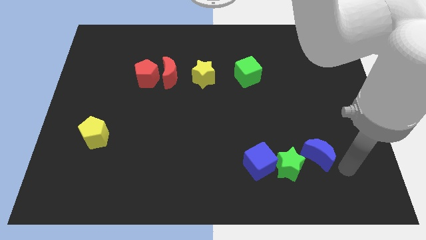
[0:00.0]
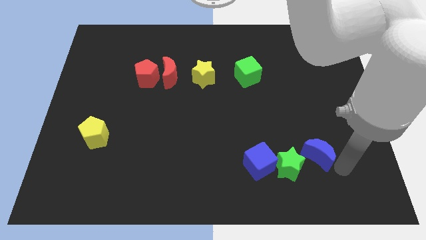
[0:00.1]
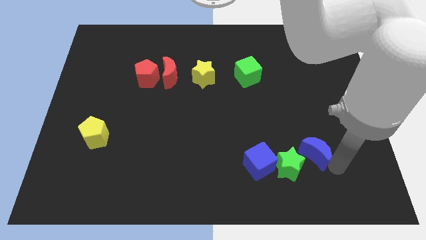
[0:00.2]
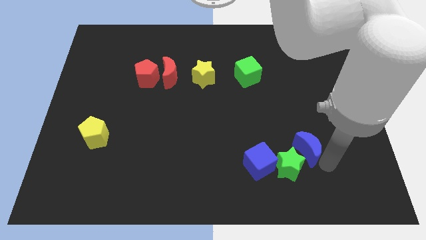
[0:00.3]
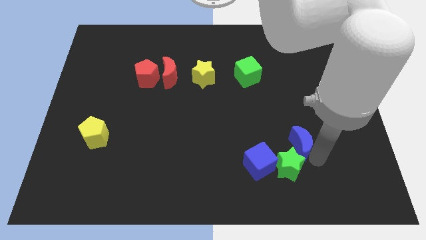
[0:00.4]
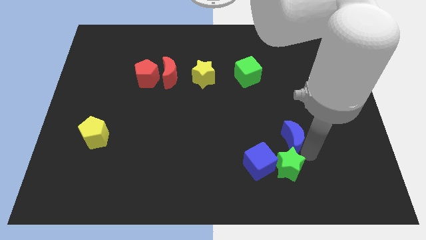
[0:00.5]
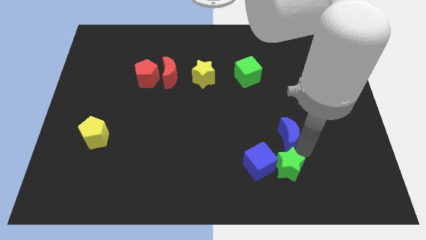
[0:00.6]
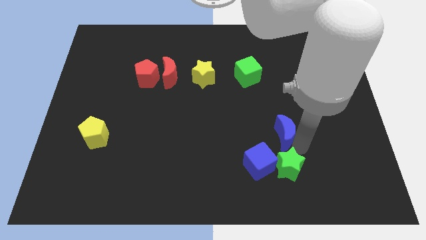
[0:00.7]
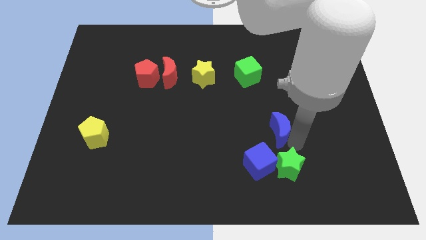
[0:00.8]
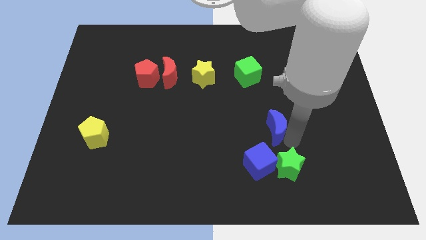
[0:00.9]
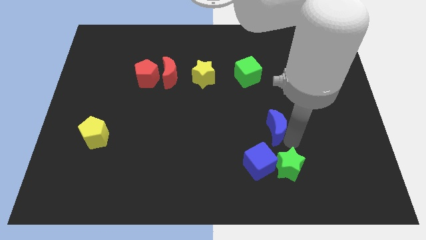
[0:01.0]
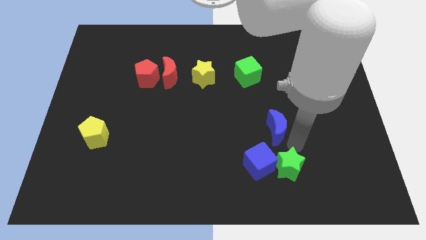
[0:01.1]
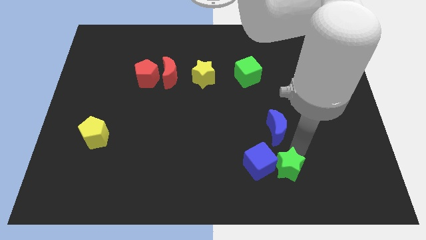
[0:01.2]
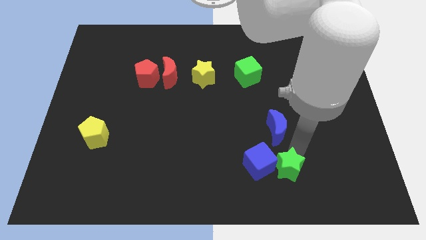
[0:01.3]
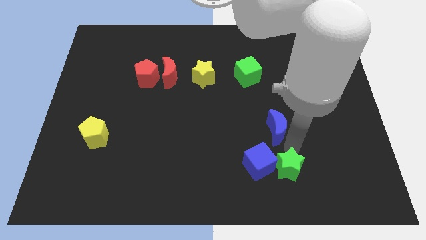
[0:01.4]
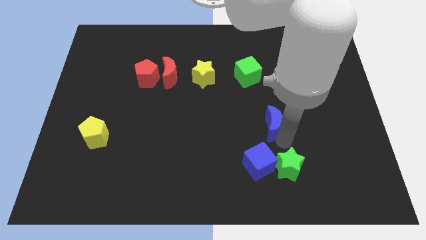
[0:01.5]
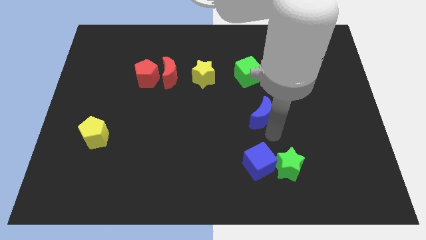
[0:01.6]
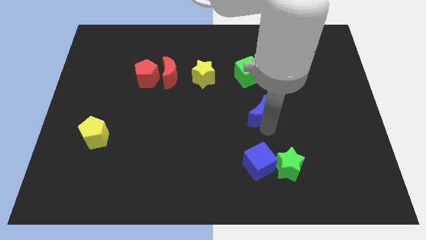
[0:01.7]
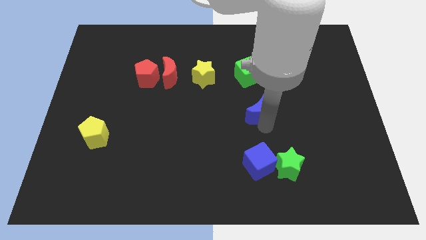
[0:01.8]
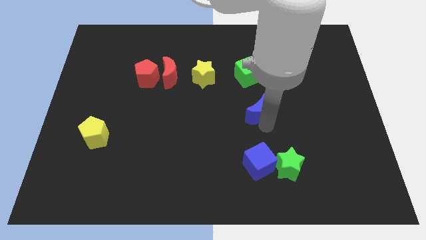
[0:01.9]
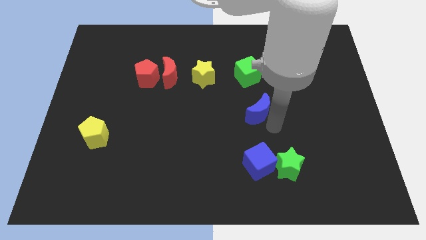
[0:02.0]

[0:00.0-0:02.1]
push the blue crescent in between the green cube and the blue cube

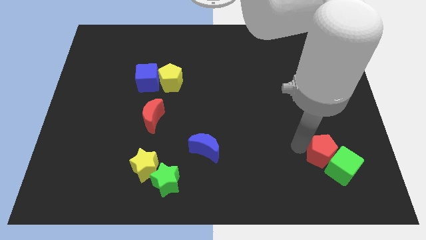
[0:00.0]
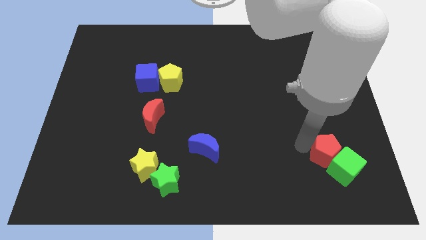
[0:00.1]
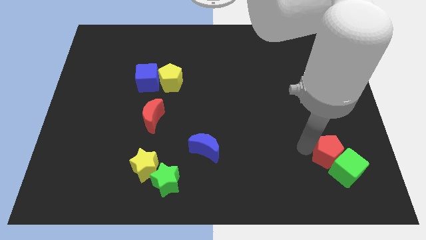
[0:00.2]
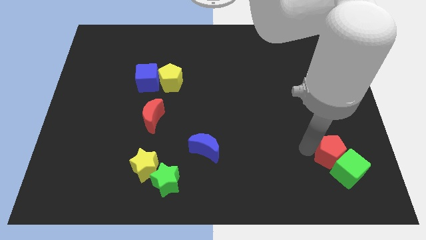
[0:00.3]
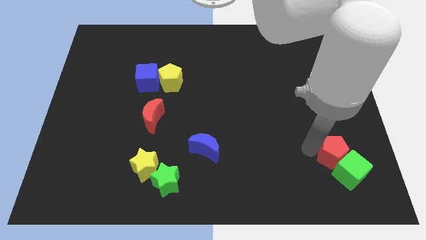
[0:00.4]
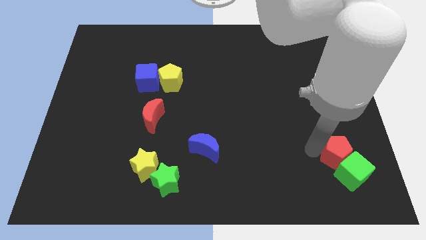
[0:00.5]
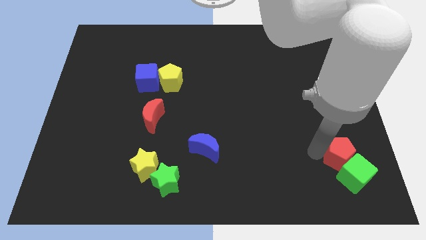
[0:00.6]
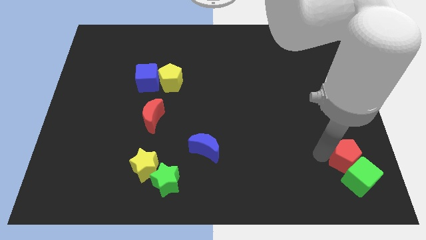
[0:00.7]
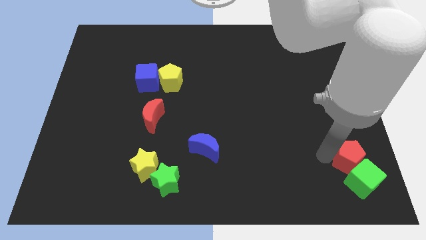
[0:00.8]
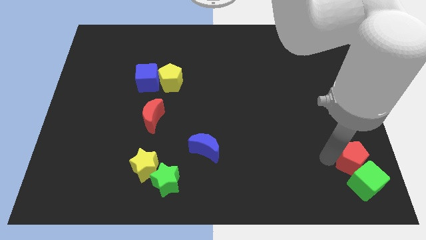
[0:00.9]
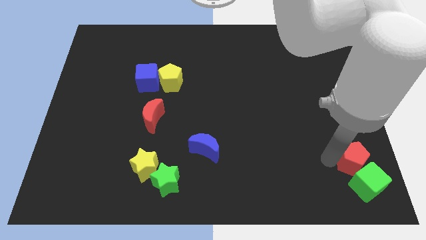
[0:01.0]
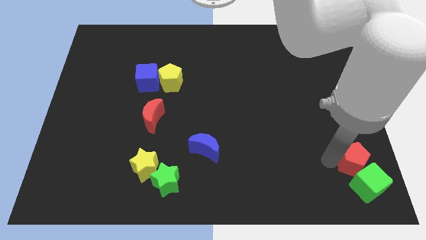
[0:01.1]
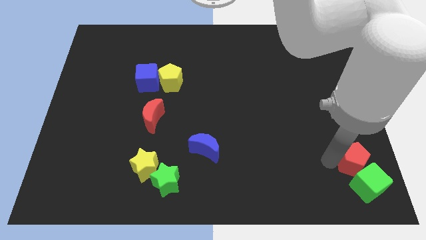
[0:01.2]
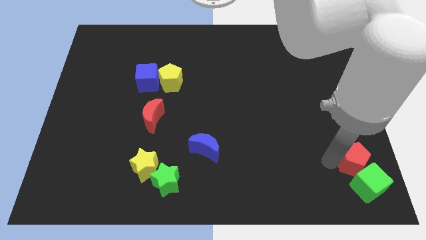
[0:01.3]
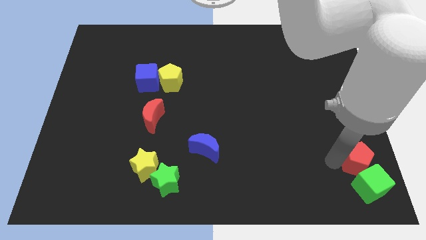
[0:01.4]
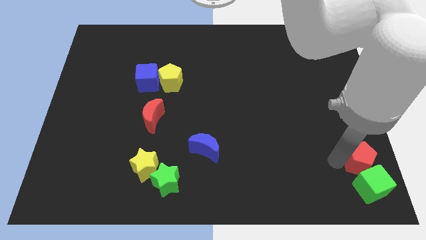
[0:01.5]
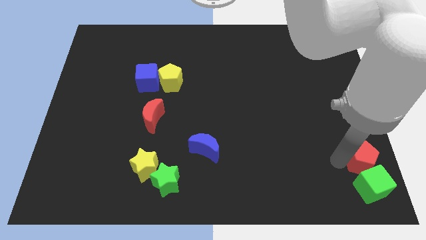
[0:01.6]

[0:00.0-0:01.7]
move the green cube and red pentagon towards the bottom right corner

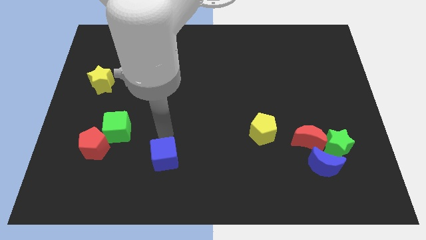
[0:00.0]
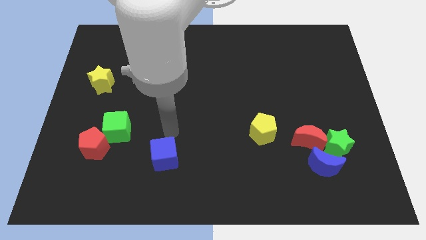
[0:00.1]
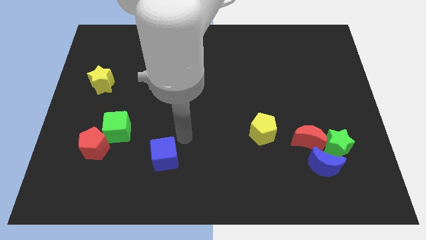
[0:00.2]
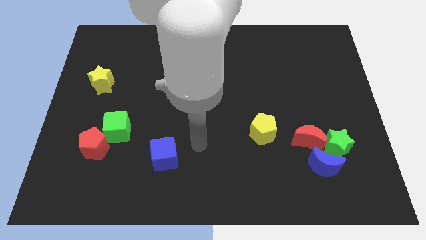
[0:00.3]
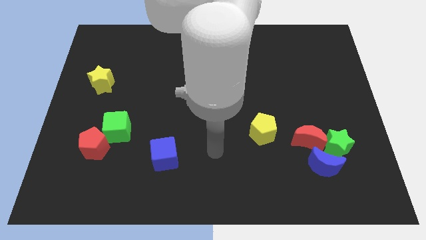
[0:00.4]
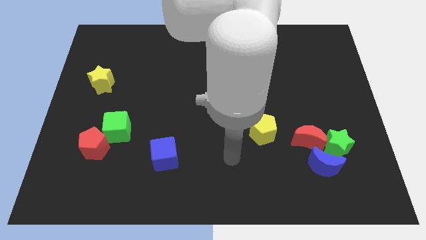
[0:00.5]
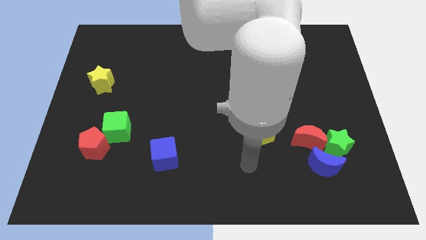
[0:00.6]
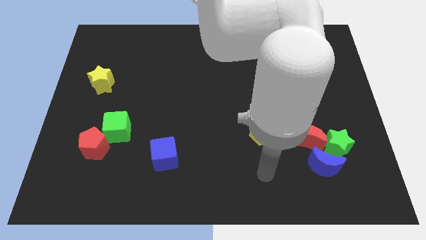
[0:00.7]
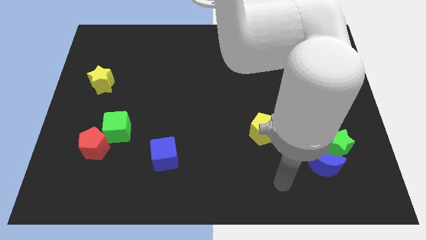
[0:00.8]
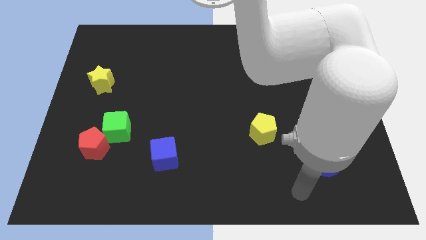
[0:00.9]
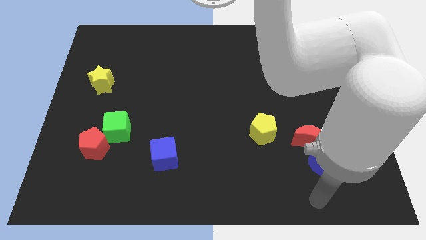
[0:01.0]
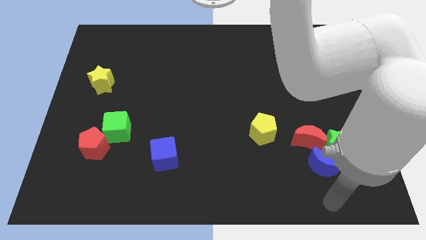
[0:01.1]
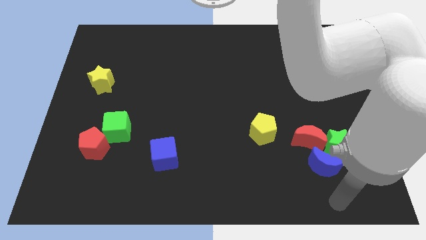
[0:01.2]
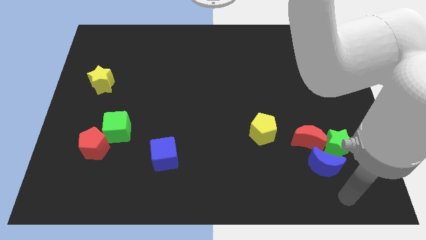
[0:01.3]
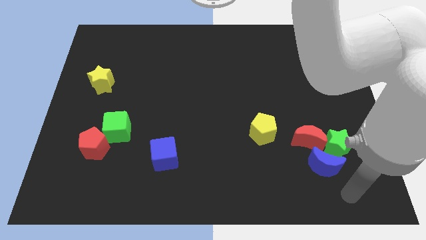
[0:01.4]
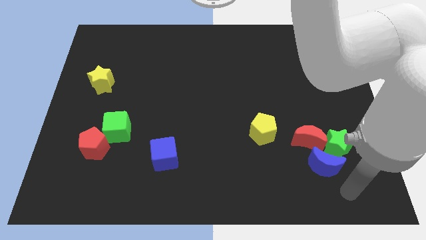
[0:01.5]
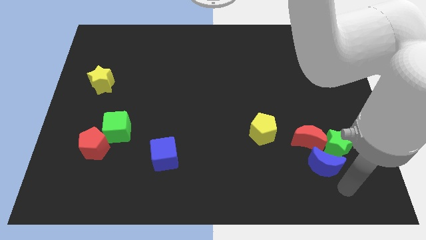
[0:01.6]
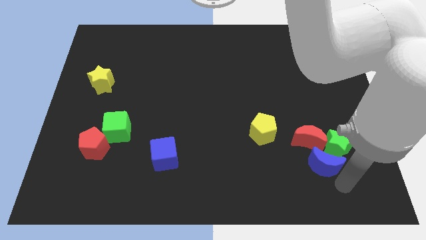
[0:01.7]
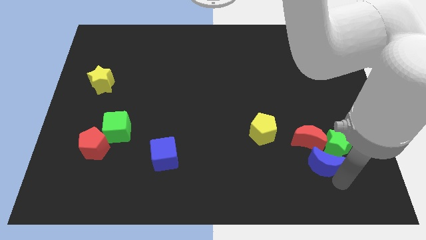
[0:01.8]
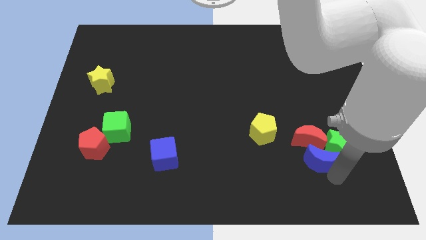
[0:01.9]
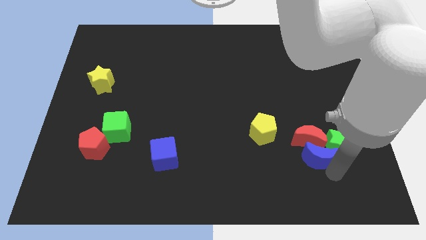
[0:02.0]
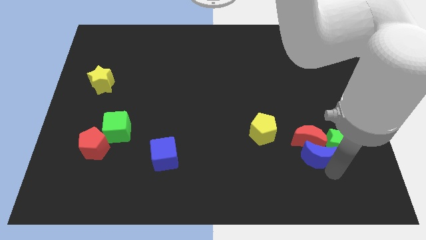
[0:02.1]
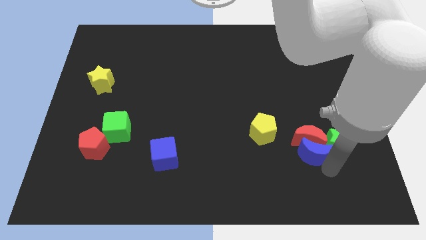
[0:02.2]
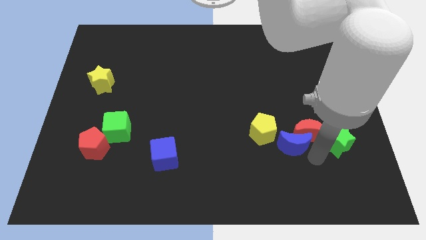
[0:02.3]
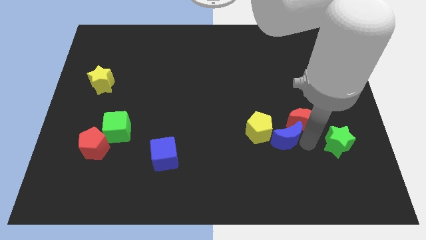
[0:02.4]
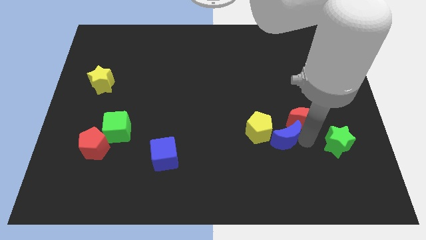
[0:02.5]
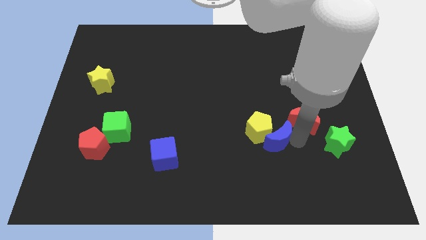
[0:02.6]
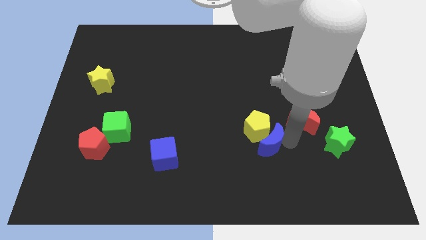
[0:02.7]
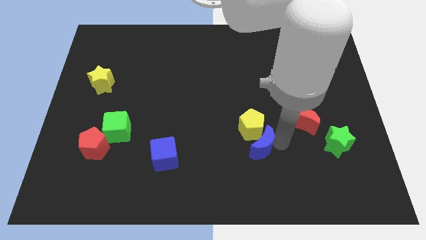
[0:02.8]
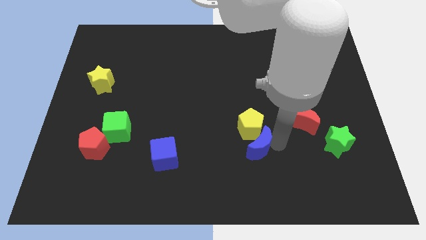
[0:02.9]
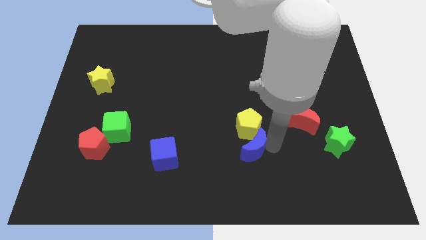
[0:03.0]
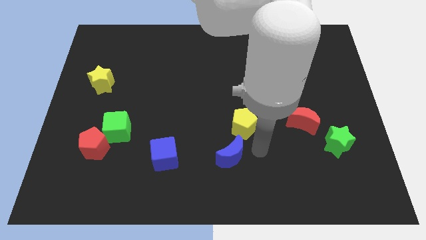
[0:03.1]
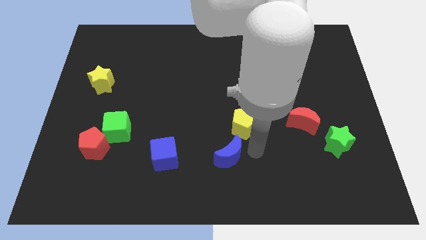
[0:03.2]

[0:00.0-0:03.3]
move blue crescent left diagonally towards yellow pentagon

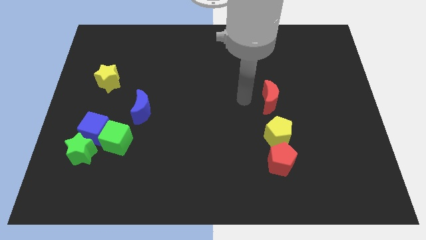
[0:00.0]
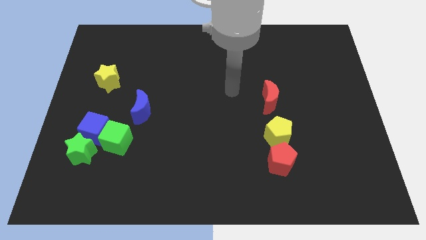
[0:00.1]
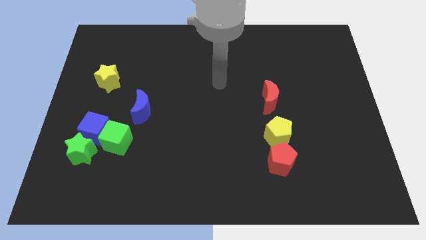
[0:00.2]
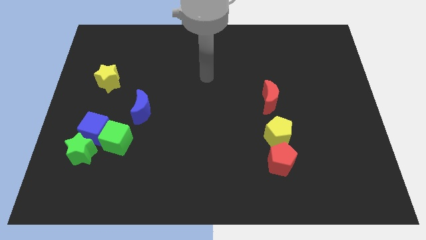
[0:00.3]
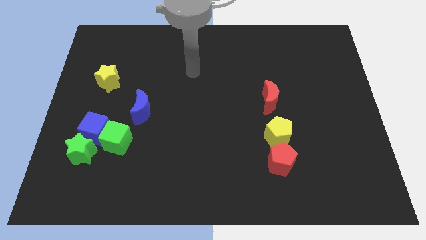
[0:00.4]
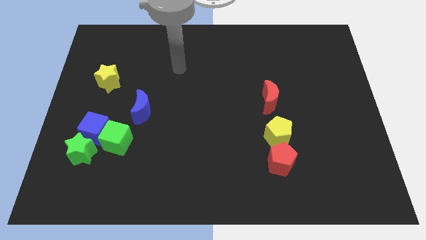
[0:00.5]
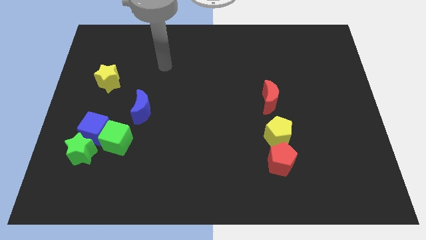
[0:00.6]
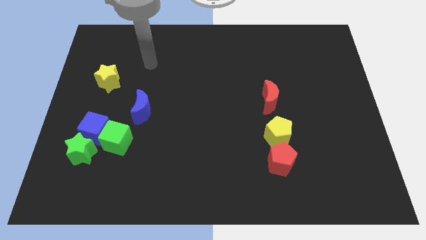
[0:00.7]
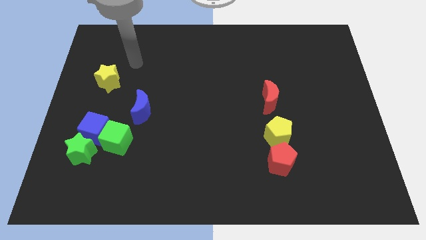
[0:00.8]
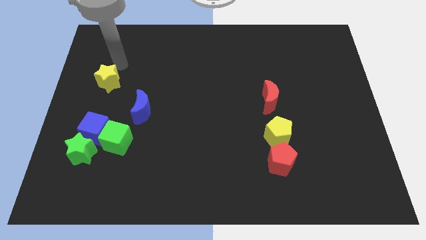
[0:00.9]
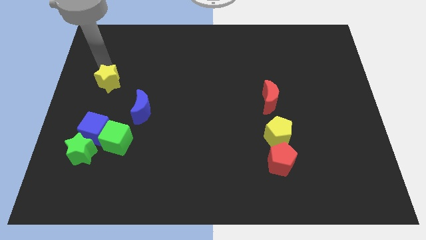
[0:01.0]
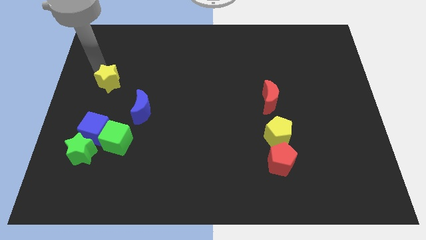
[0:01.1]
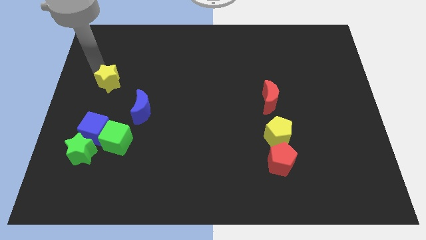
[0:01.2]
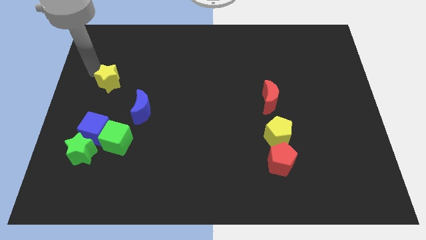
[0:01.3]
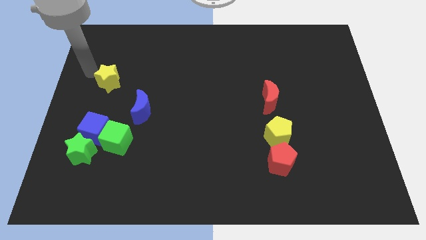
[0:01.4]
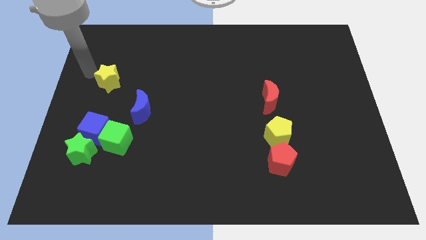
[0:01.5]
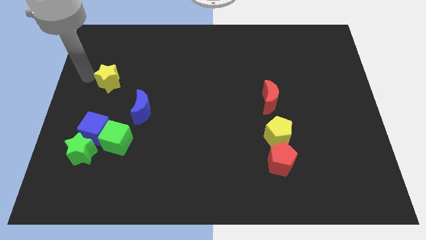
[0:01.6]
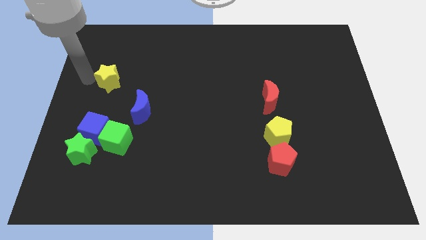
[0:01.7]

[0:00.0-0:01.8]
move your arm towards yellow star
